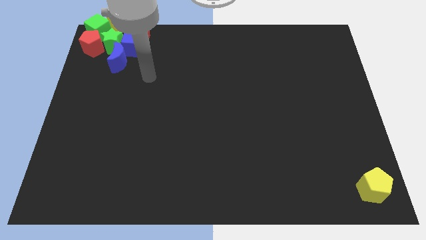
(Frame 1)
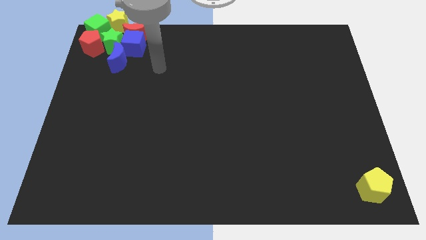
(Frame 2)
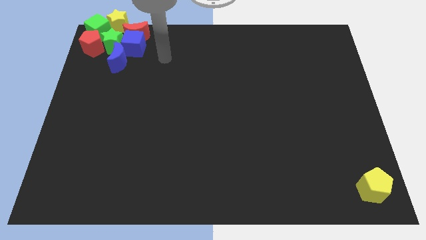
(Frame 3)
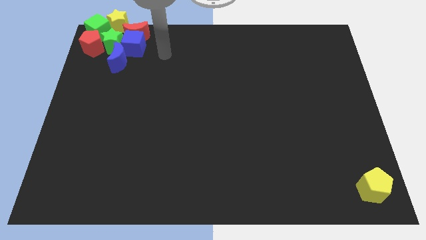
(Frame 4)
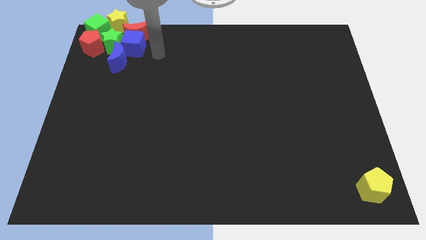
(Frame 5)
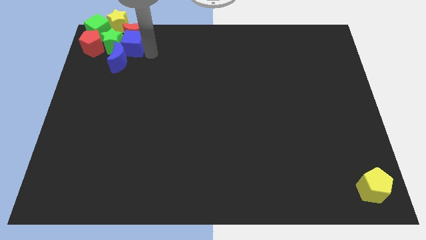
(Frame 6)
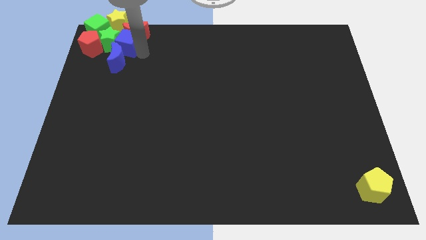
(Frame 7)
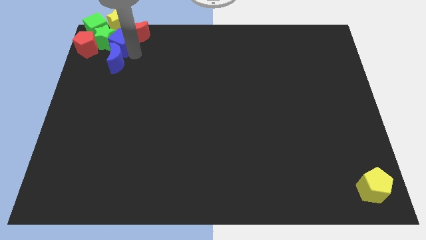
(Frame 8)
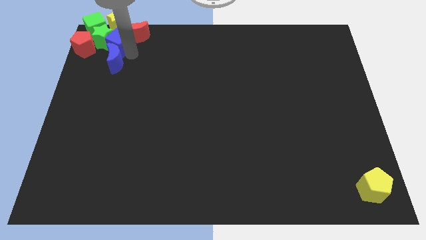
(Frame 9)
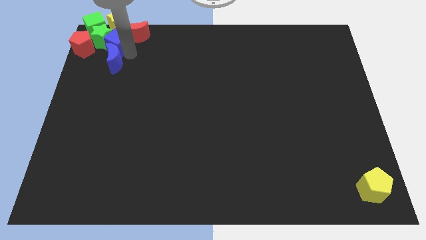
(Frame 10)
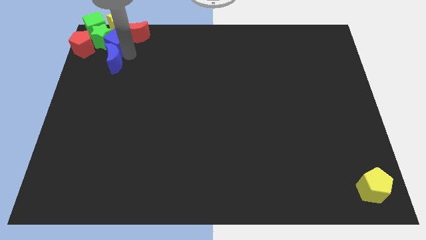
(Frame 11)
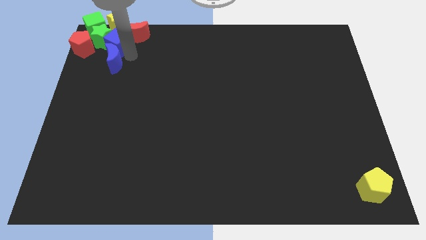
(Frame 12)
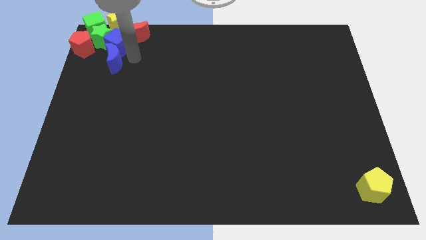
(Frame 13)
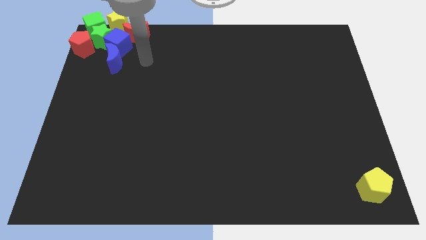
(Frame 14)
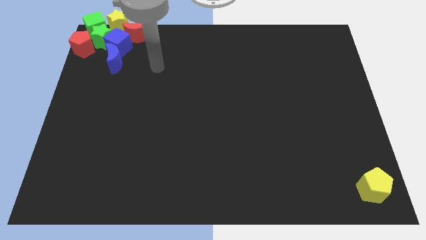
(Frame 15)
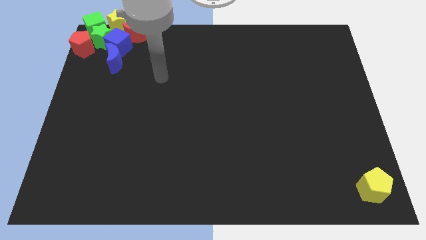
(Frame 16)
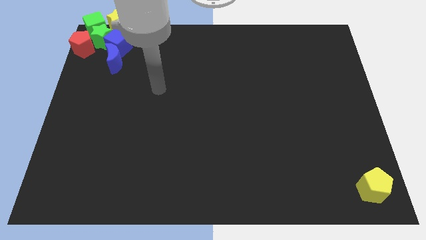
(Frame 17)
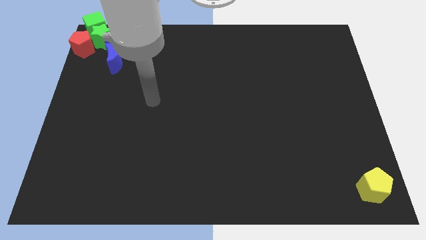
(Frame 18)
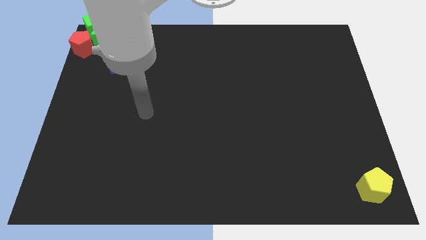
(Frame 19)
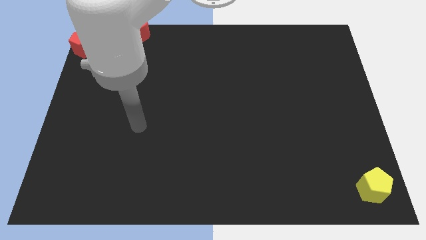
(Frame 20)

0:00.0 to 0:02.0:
group up all the blocks except the yellow pentagon

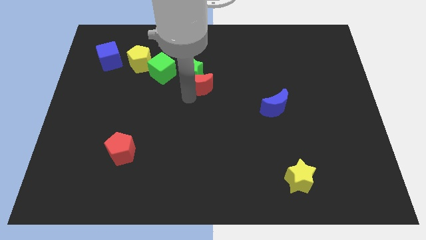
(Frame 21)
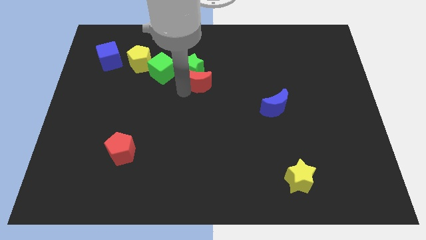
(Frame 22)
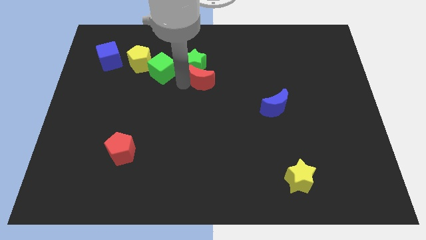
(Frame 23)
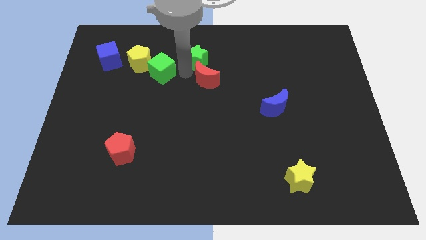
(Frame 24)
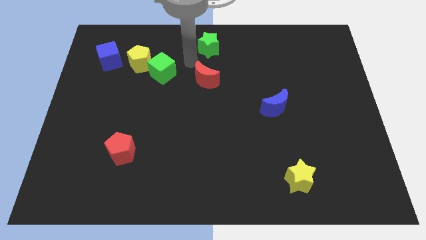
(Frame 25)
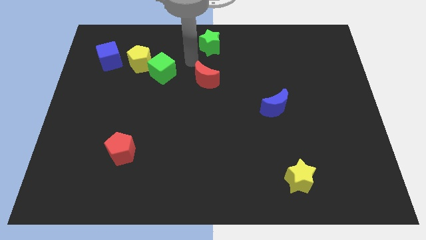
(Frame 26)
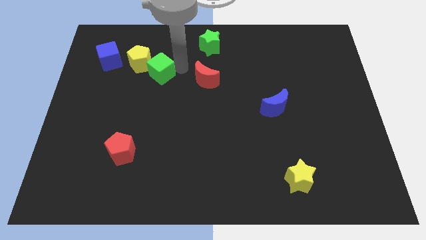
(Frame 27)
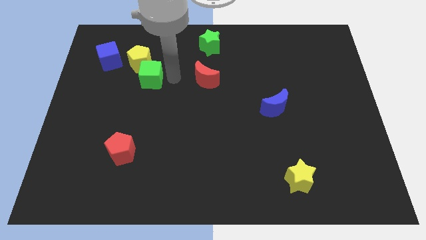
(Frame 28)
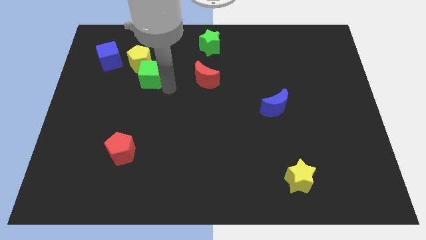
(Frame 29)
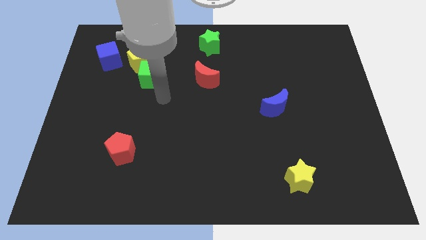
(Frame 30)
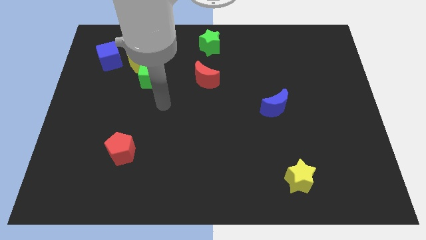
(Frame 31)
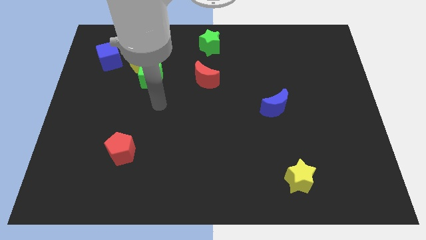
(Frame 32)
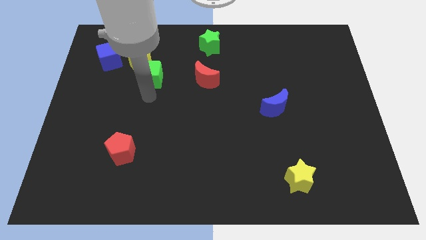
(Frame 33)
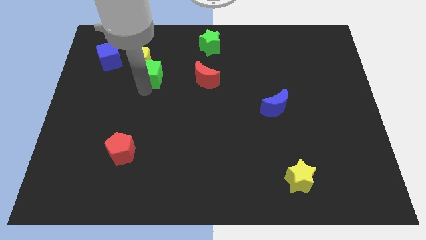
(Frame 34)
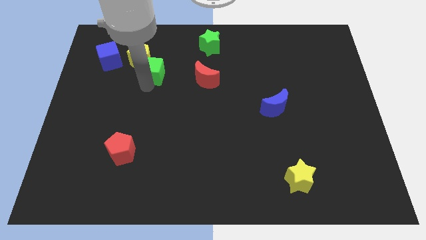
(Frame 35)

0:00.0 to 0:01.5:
separate the green star and the red moon

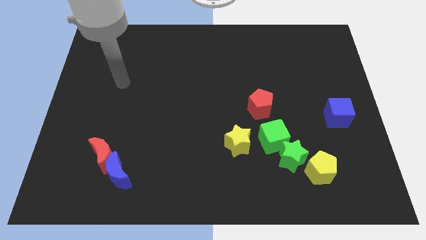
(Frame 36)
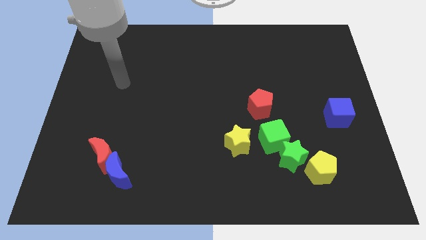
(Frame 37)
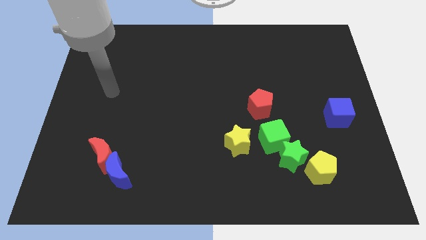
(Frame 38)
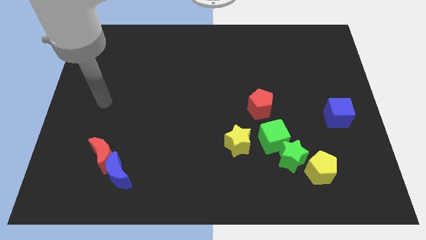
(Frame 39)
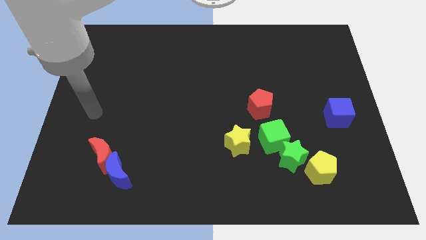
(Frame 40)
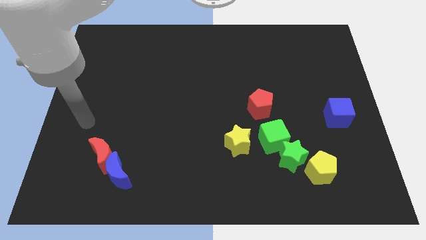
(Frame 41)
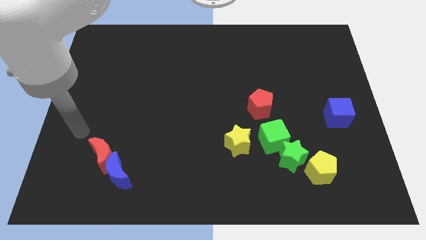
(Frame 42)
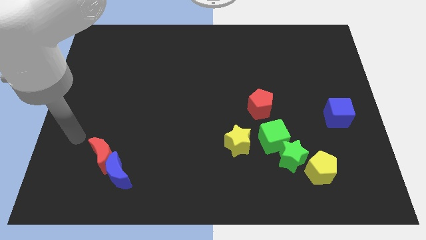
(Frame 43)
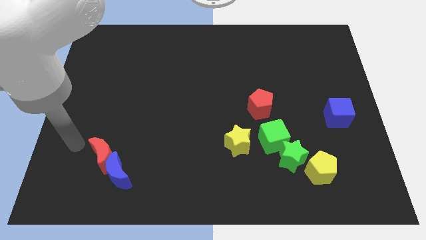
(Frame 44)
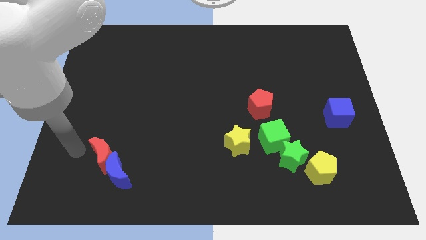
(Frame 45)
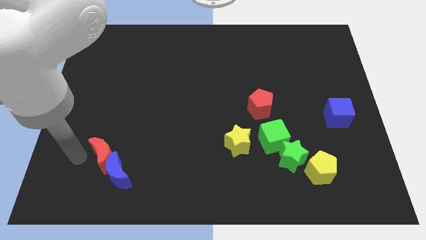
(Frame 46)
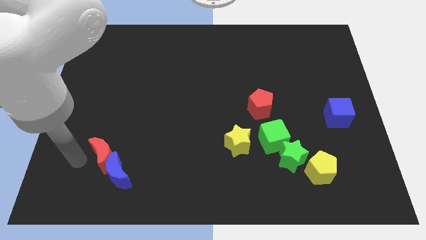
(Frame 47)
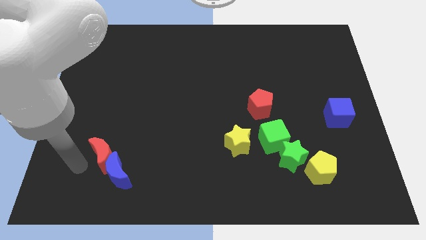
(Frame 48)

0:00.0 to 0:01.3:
point the arm left side of the red moon

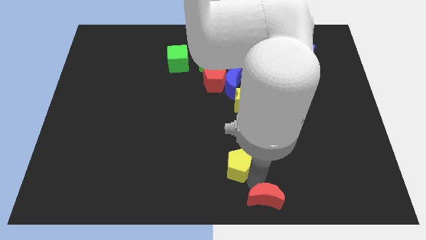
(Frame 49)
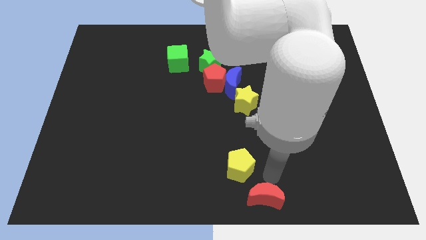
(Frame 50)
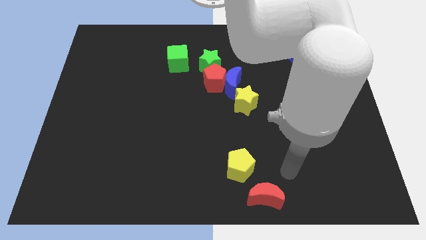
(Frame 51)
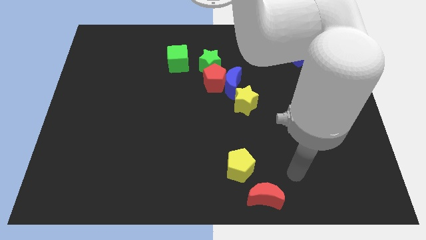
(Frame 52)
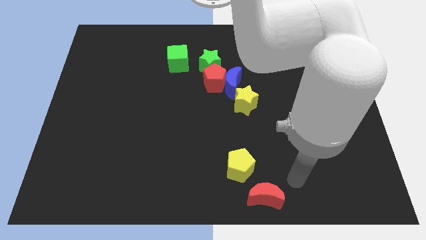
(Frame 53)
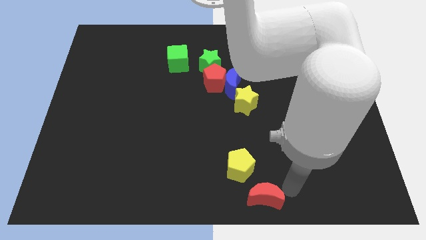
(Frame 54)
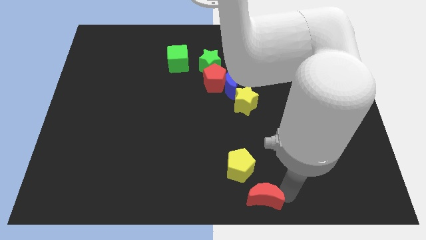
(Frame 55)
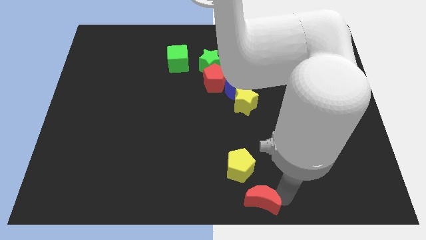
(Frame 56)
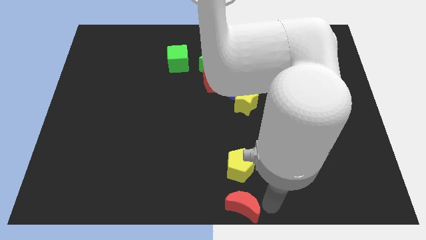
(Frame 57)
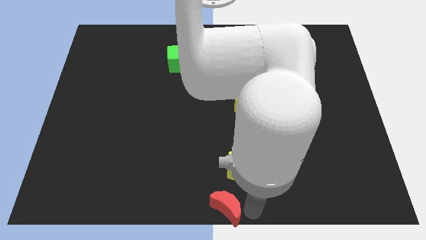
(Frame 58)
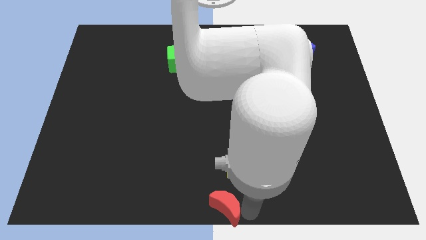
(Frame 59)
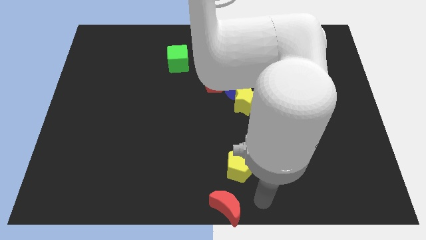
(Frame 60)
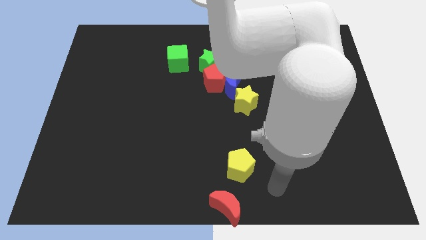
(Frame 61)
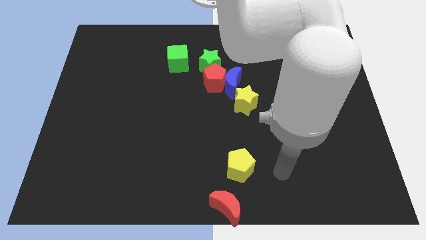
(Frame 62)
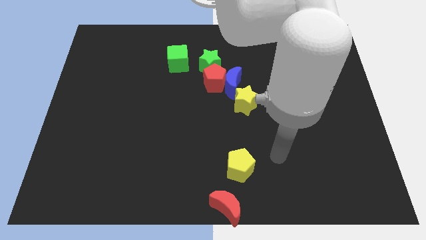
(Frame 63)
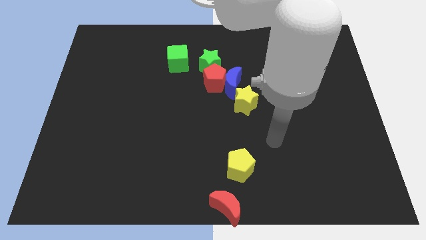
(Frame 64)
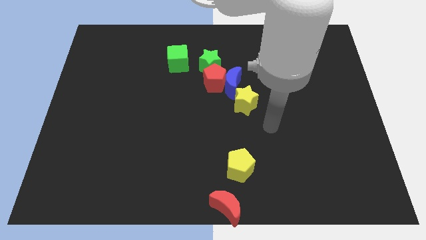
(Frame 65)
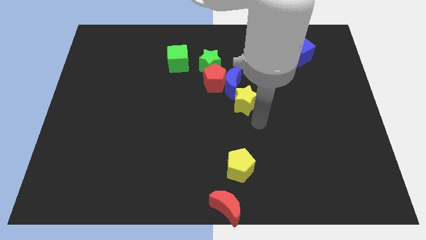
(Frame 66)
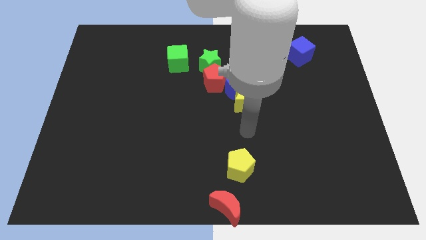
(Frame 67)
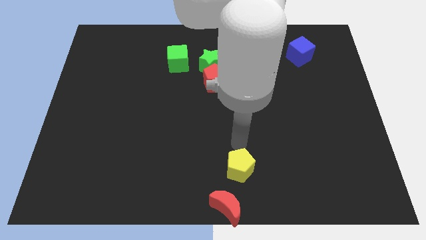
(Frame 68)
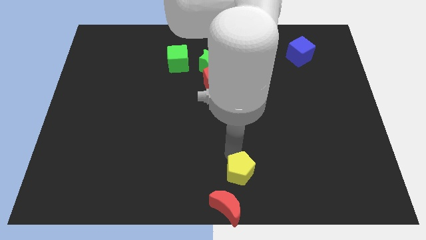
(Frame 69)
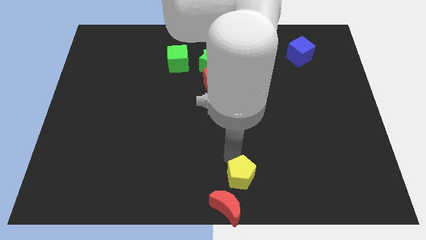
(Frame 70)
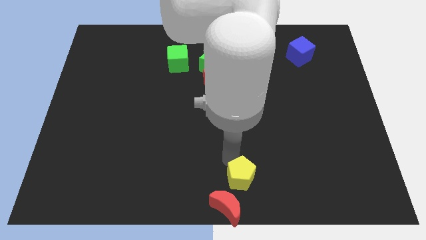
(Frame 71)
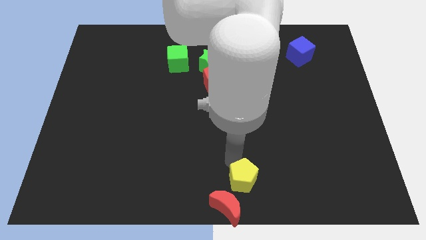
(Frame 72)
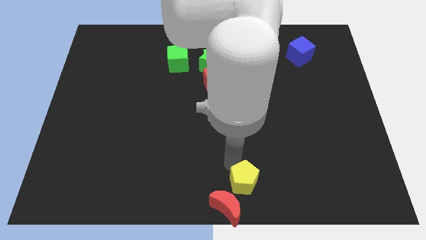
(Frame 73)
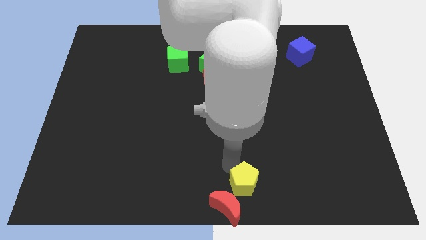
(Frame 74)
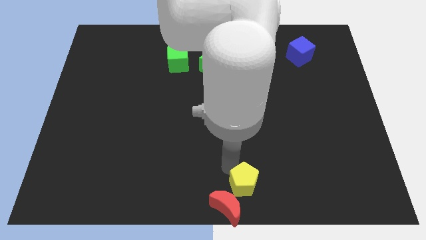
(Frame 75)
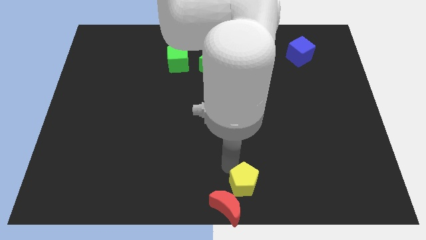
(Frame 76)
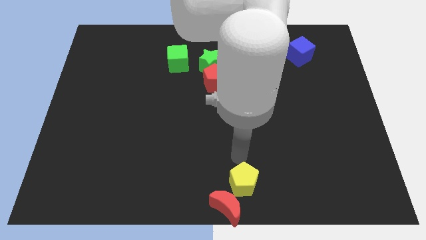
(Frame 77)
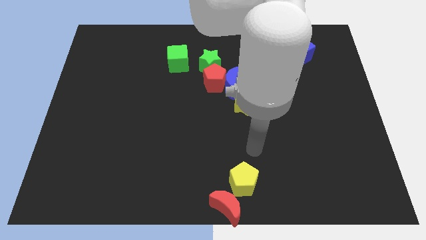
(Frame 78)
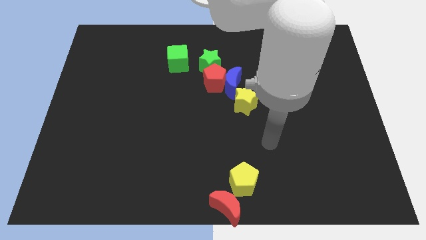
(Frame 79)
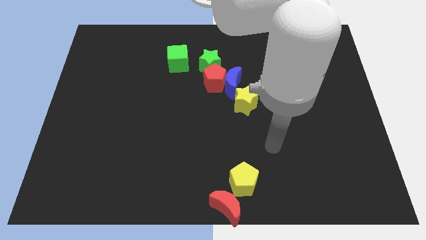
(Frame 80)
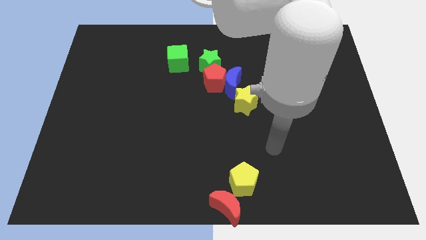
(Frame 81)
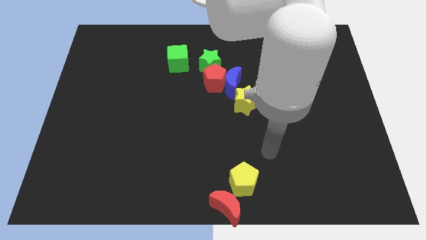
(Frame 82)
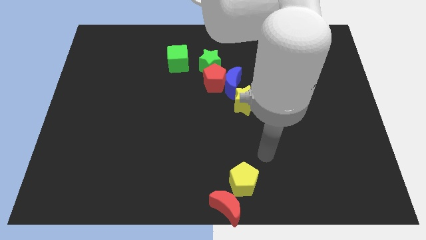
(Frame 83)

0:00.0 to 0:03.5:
move the red crescent and yellow pentagon diagonal to each other

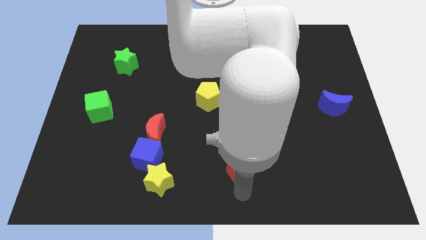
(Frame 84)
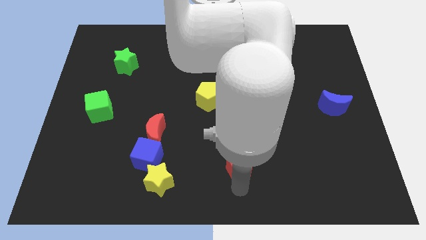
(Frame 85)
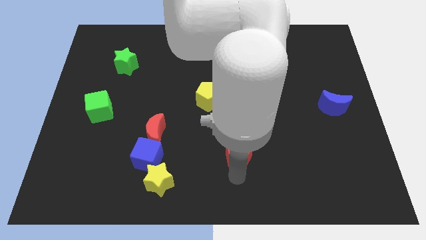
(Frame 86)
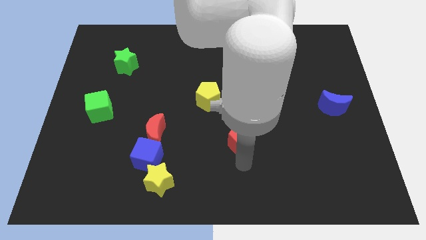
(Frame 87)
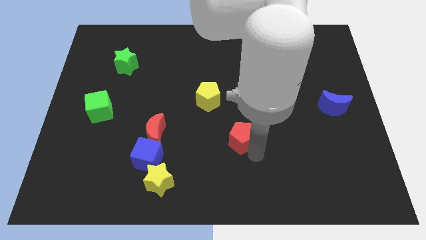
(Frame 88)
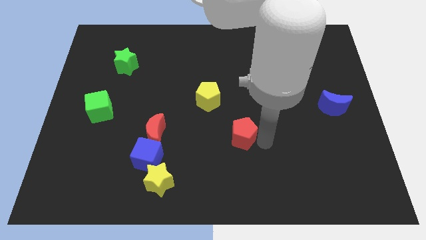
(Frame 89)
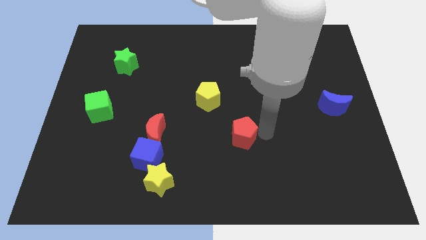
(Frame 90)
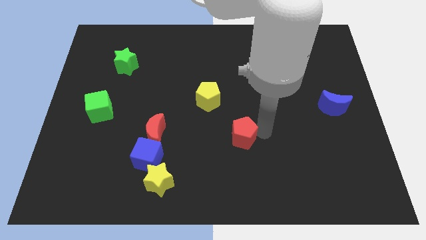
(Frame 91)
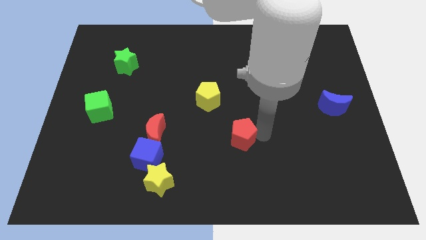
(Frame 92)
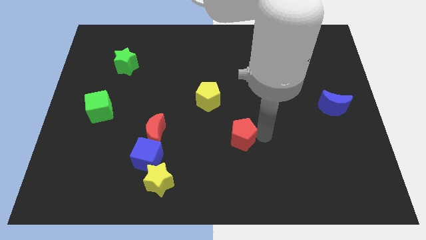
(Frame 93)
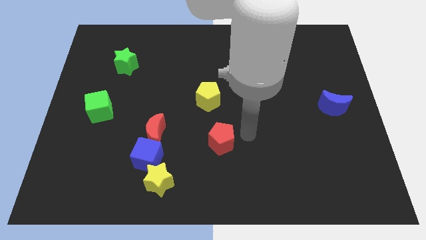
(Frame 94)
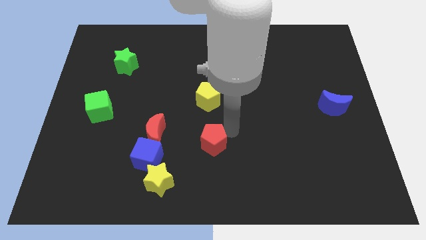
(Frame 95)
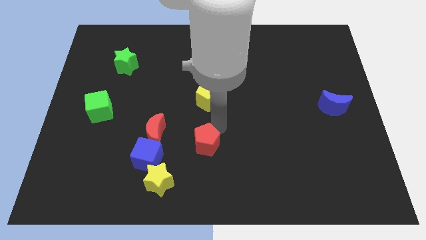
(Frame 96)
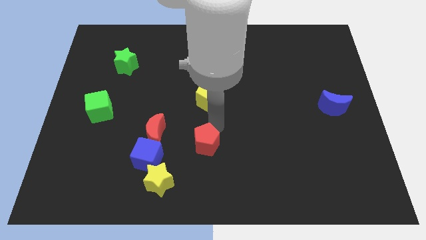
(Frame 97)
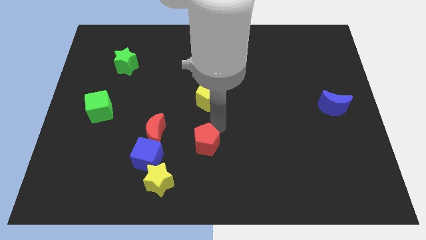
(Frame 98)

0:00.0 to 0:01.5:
slide the red pentagon diagonally top right to the blue cube
